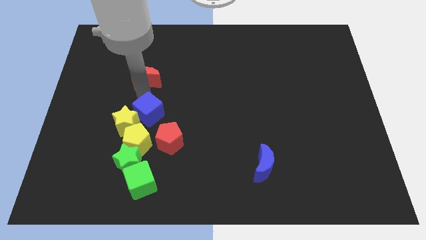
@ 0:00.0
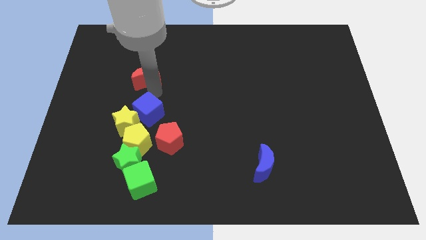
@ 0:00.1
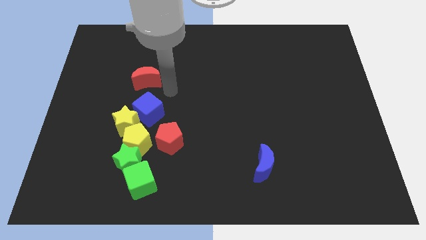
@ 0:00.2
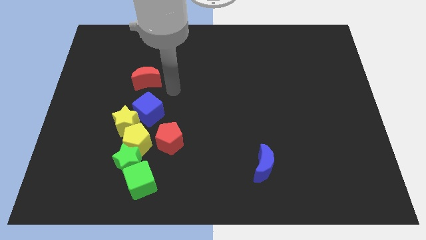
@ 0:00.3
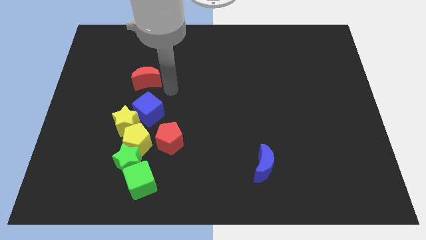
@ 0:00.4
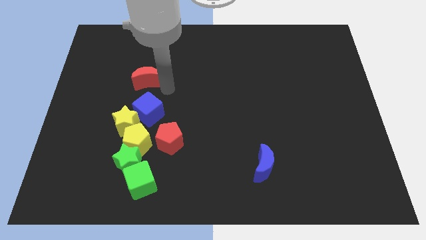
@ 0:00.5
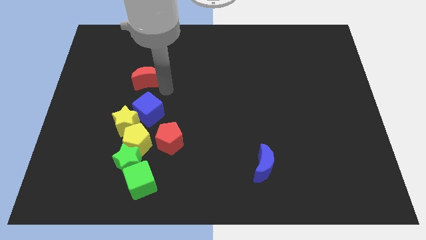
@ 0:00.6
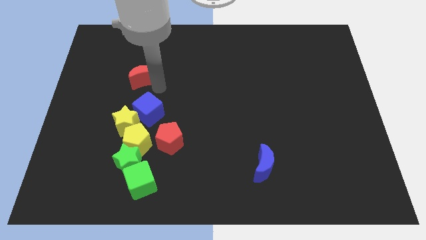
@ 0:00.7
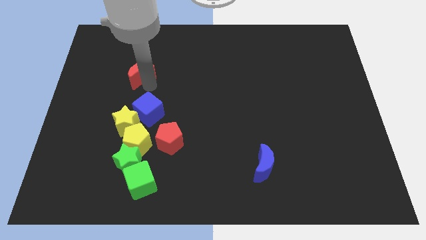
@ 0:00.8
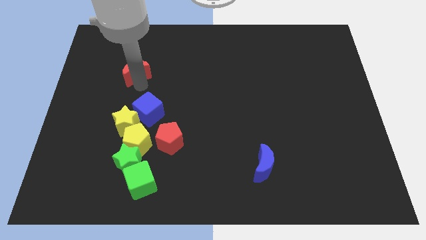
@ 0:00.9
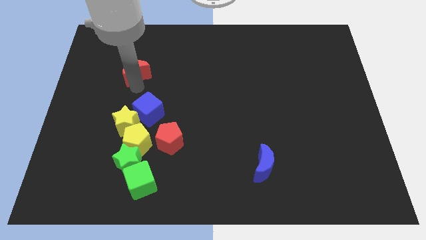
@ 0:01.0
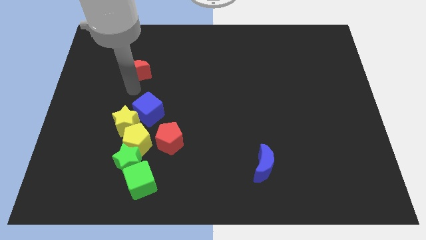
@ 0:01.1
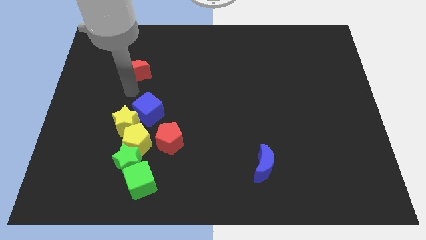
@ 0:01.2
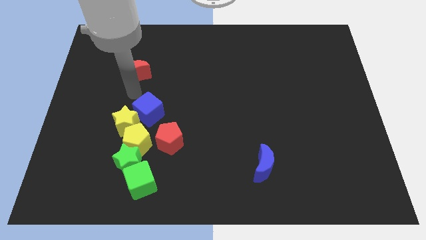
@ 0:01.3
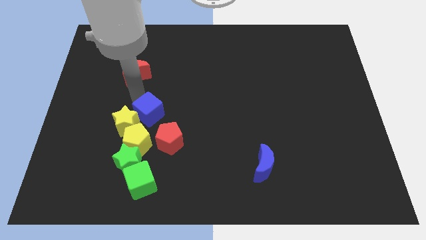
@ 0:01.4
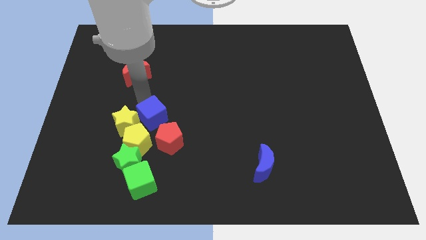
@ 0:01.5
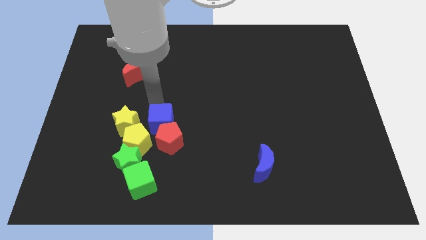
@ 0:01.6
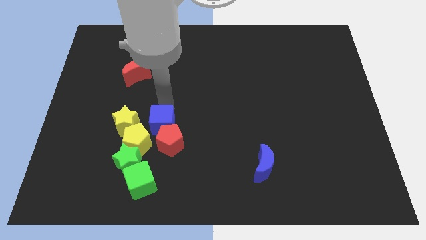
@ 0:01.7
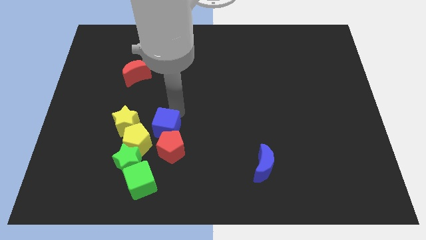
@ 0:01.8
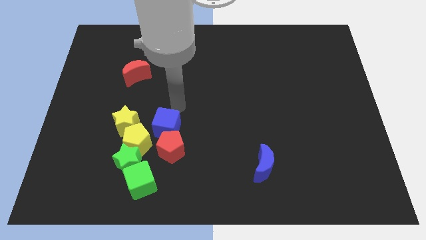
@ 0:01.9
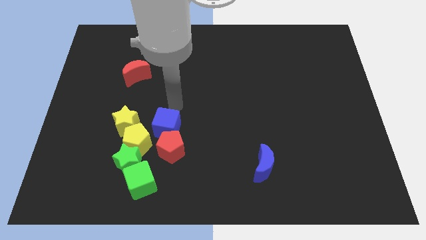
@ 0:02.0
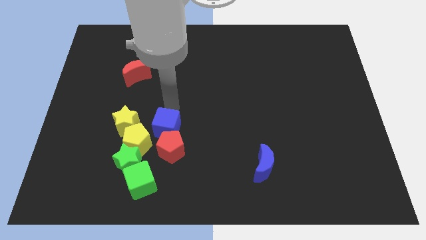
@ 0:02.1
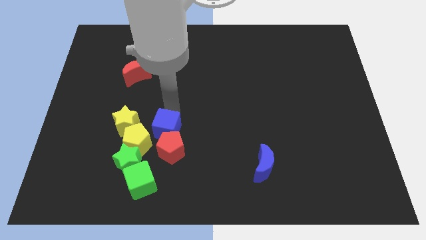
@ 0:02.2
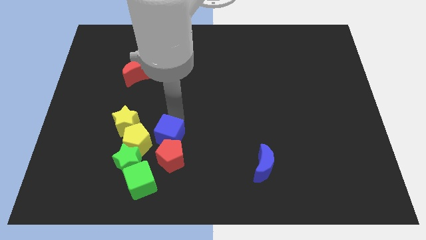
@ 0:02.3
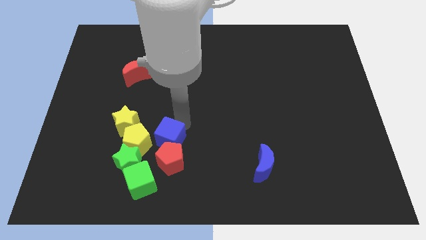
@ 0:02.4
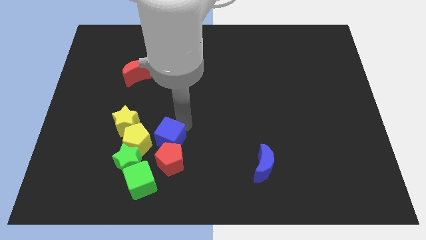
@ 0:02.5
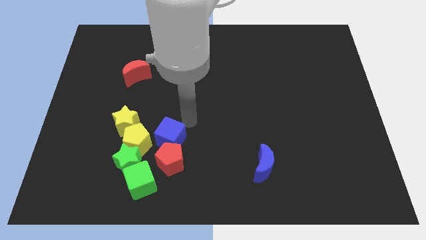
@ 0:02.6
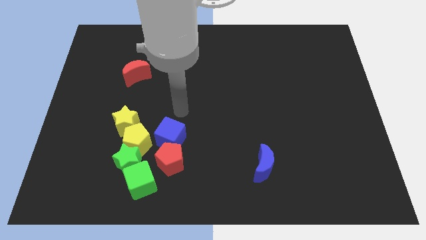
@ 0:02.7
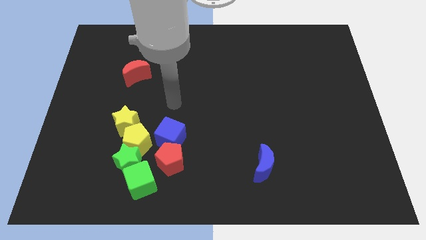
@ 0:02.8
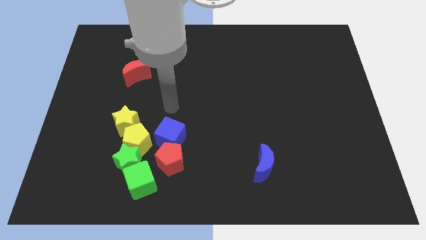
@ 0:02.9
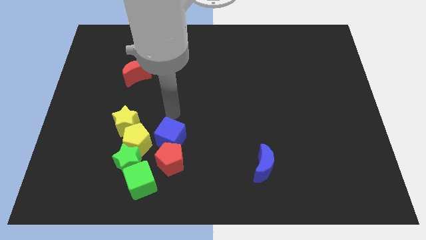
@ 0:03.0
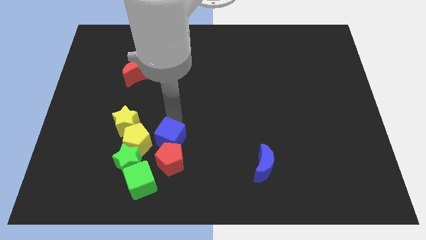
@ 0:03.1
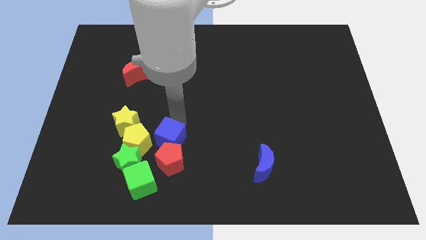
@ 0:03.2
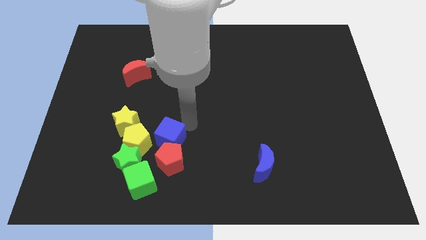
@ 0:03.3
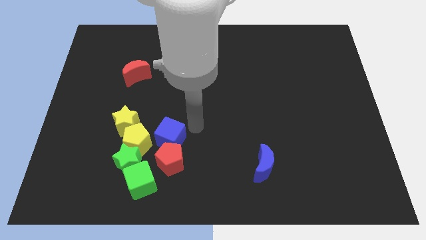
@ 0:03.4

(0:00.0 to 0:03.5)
move the blue cube into the top side of the red pentagon

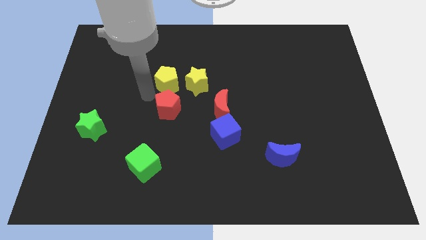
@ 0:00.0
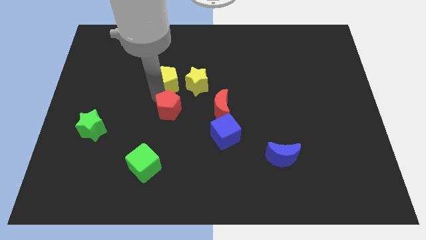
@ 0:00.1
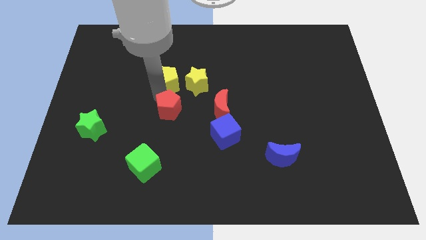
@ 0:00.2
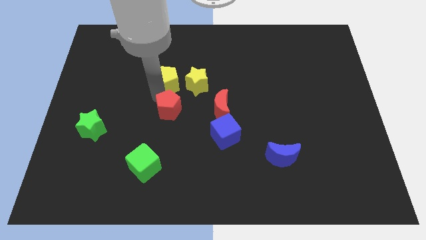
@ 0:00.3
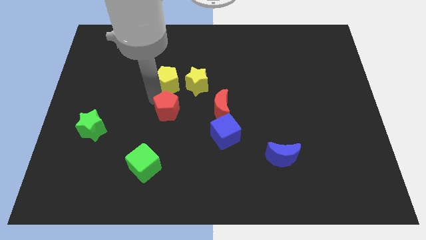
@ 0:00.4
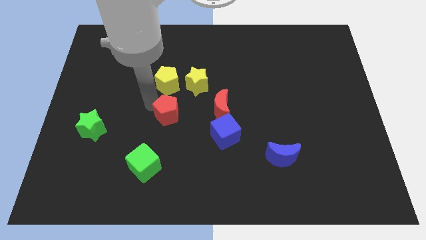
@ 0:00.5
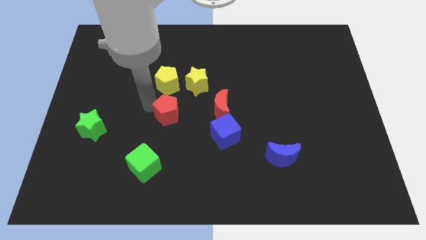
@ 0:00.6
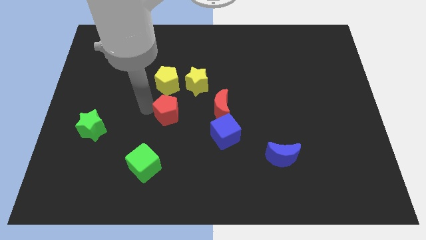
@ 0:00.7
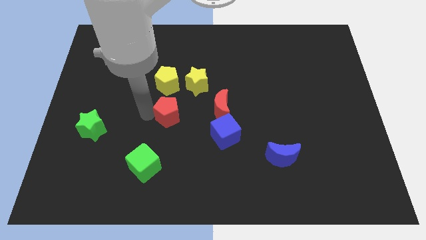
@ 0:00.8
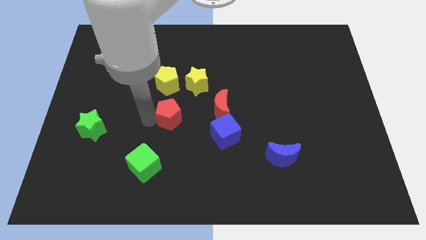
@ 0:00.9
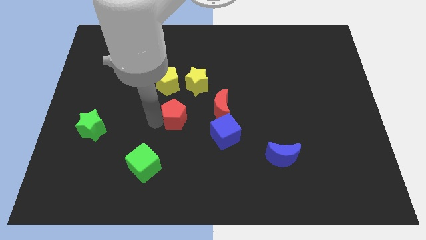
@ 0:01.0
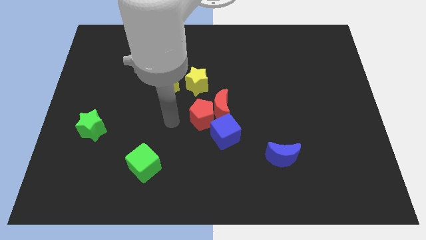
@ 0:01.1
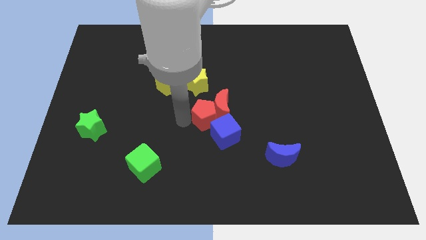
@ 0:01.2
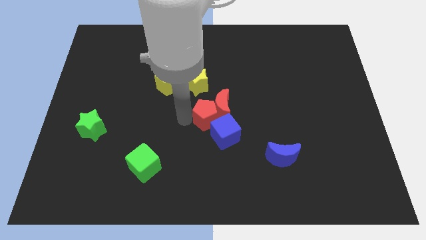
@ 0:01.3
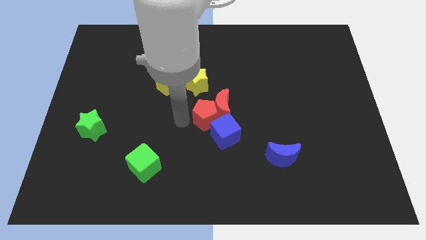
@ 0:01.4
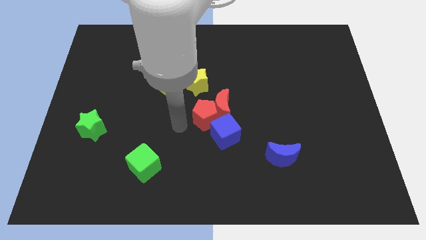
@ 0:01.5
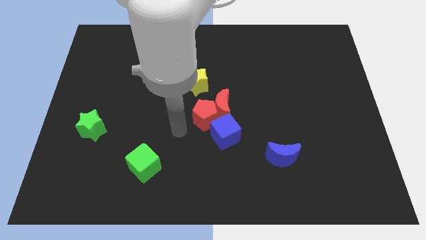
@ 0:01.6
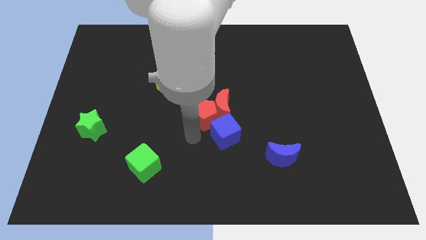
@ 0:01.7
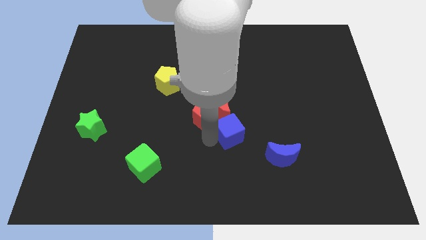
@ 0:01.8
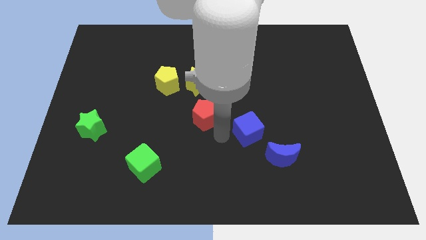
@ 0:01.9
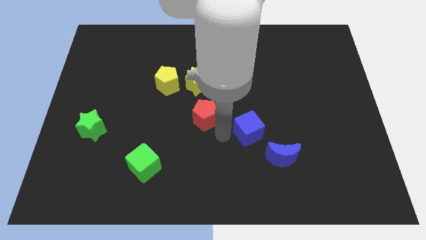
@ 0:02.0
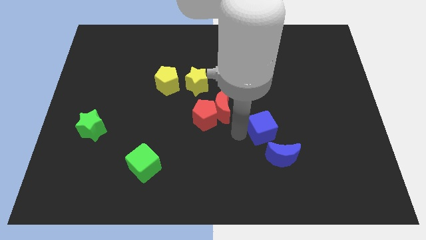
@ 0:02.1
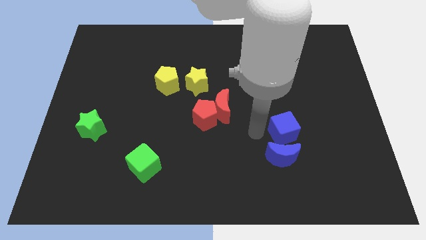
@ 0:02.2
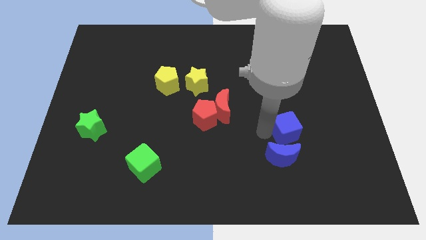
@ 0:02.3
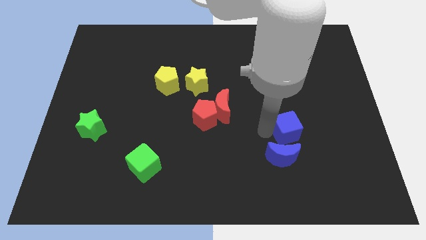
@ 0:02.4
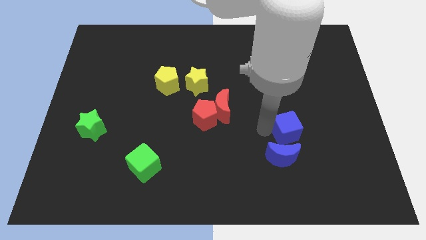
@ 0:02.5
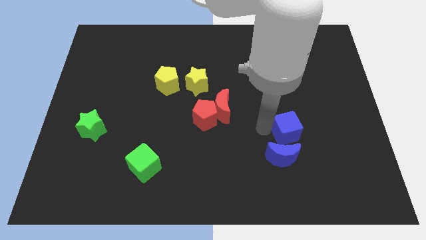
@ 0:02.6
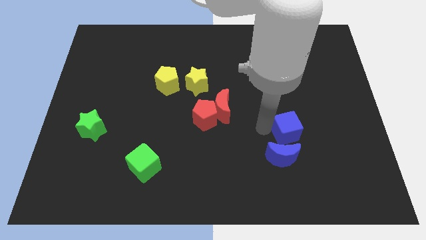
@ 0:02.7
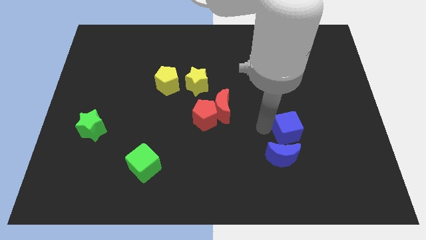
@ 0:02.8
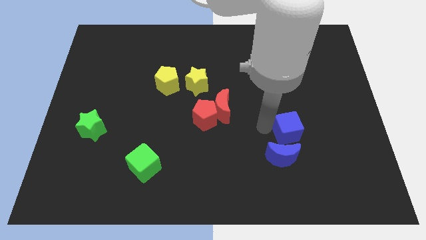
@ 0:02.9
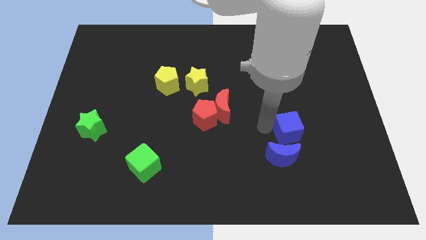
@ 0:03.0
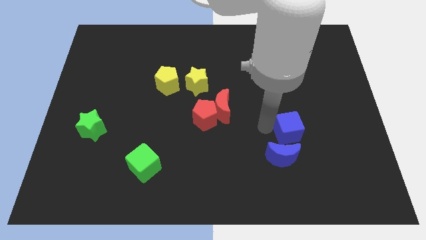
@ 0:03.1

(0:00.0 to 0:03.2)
separate the red pentagon from yellow pentagon

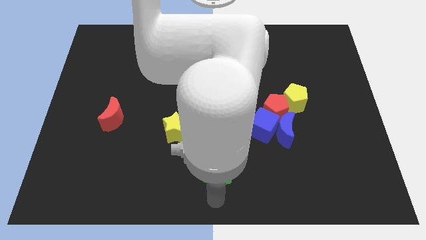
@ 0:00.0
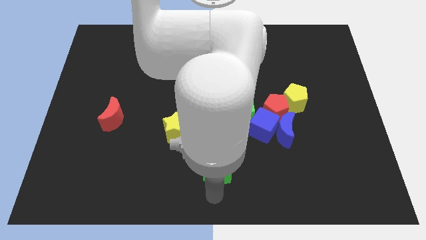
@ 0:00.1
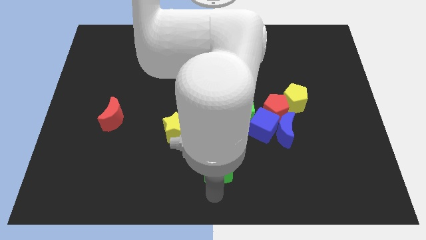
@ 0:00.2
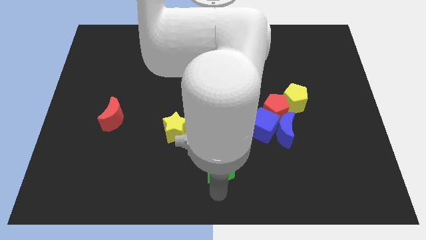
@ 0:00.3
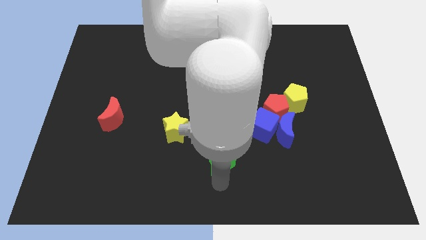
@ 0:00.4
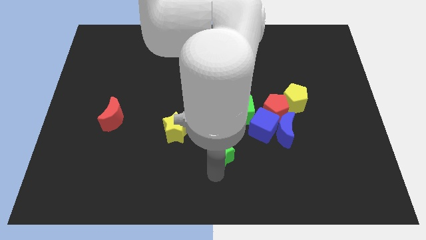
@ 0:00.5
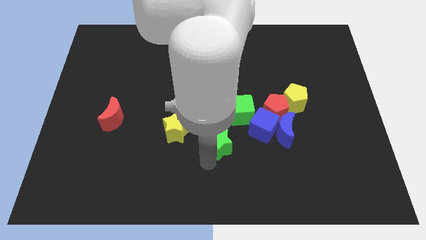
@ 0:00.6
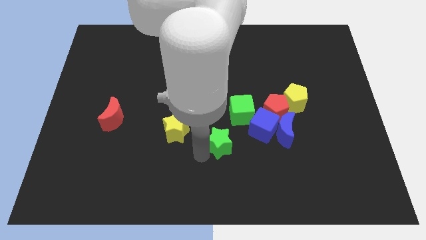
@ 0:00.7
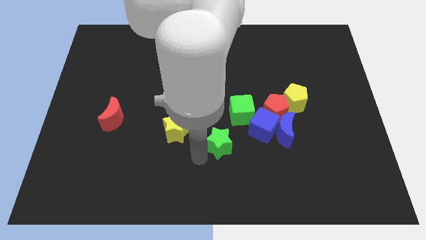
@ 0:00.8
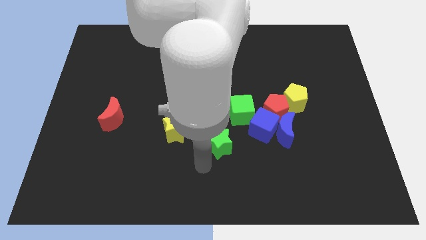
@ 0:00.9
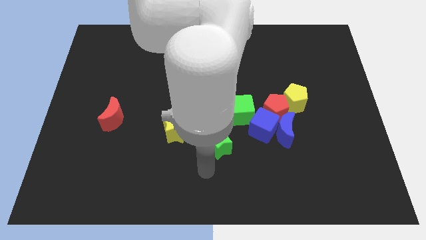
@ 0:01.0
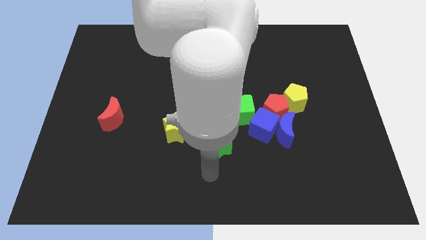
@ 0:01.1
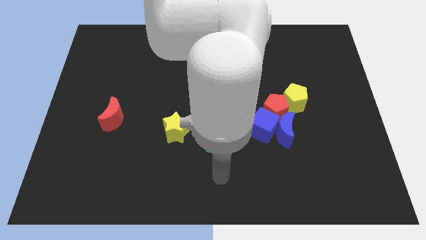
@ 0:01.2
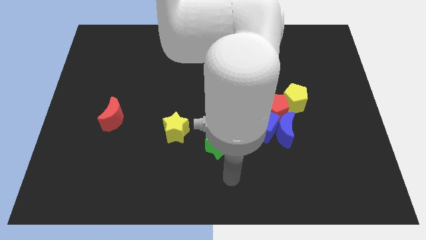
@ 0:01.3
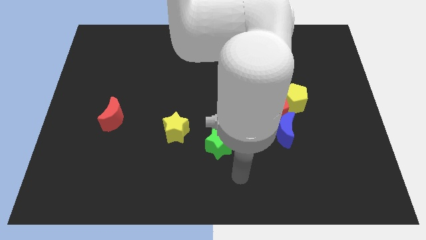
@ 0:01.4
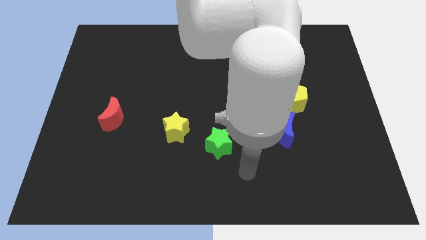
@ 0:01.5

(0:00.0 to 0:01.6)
push green star upwards

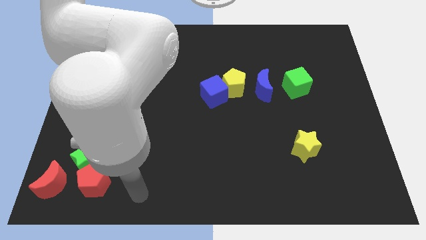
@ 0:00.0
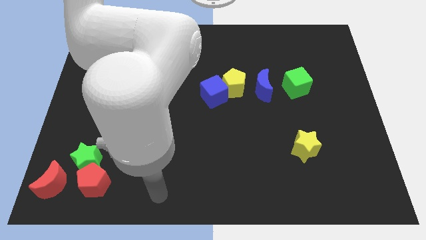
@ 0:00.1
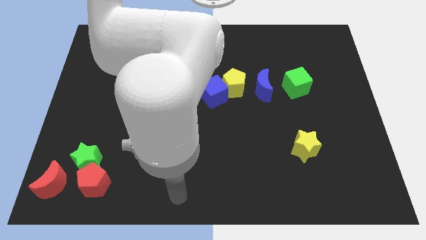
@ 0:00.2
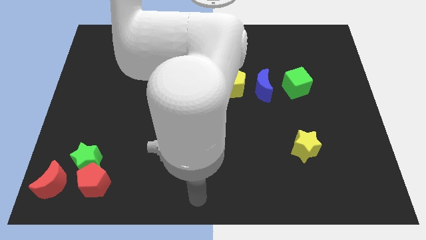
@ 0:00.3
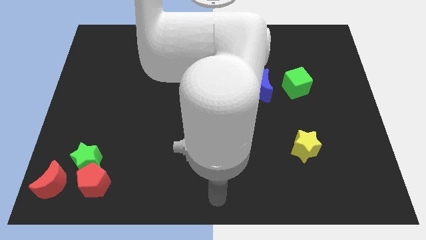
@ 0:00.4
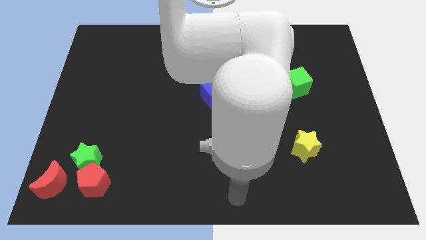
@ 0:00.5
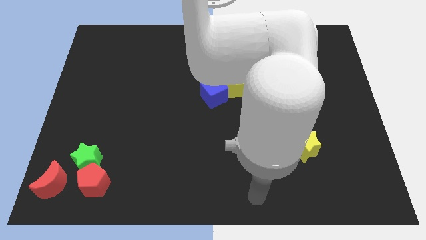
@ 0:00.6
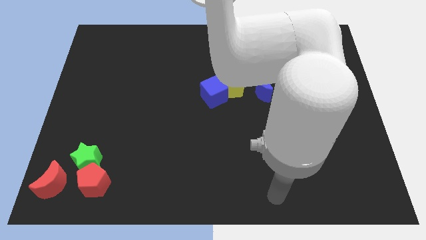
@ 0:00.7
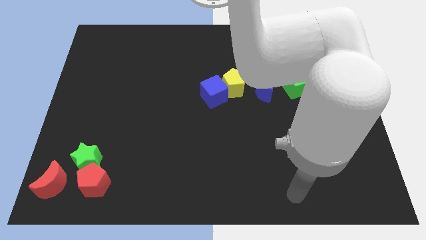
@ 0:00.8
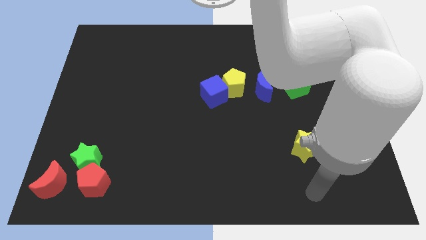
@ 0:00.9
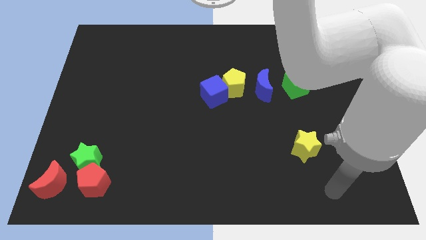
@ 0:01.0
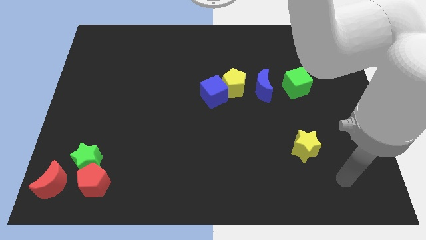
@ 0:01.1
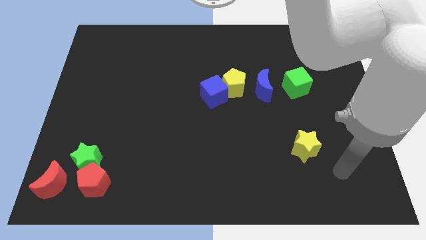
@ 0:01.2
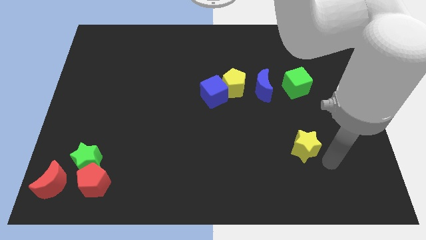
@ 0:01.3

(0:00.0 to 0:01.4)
move arm to the right of yellow star
